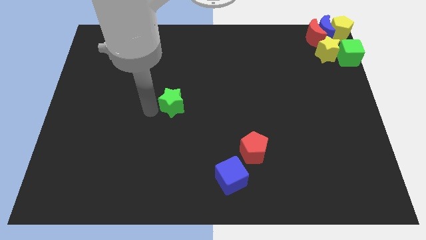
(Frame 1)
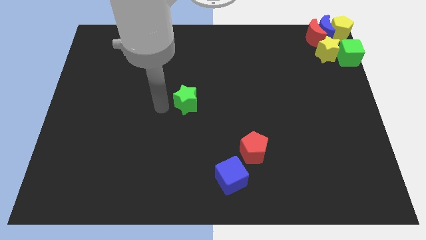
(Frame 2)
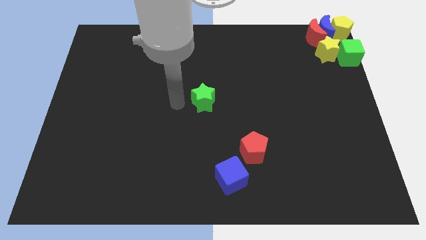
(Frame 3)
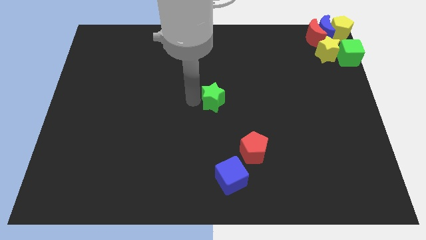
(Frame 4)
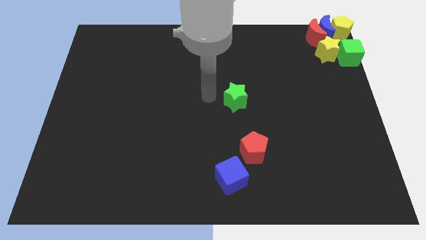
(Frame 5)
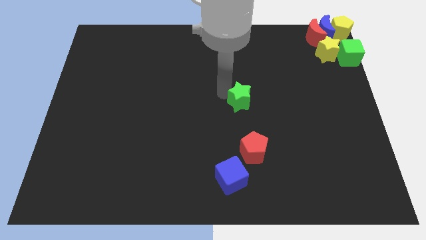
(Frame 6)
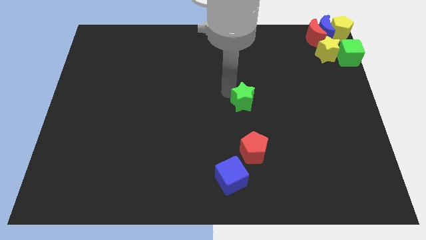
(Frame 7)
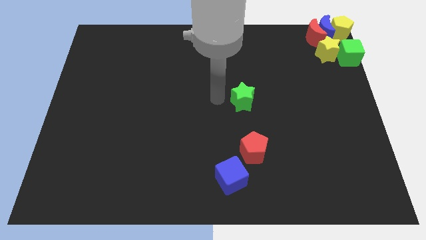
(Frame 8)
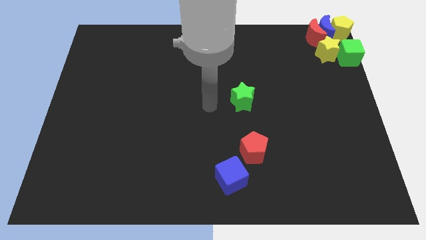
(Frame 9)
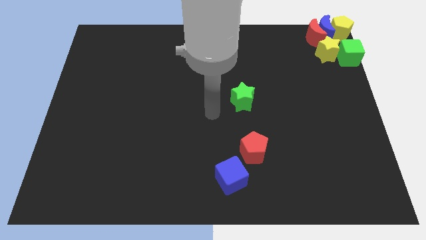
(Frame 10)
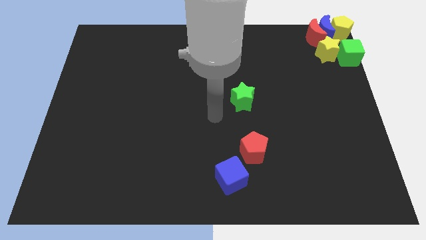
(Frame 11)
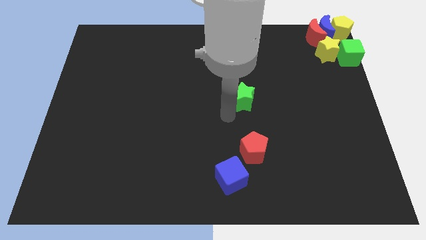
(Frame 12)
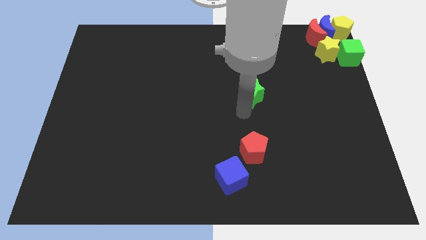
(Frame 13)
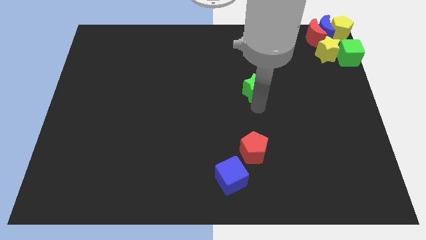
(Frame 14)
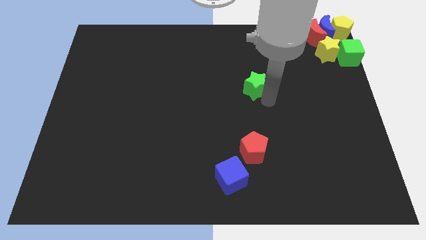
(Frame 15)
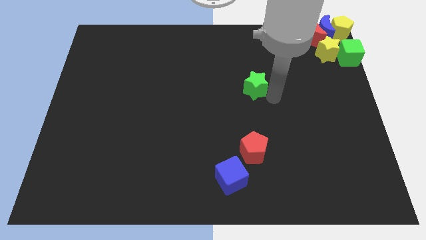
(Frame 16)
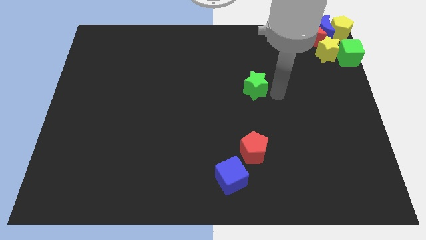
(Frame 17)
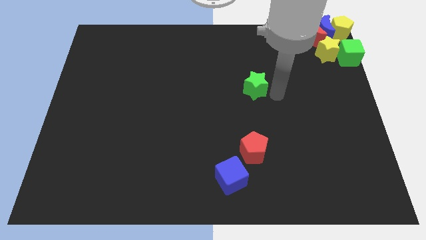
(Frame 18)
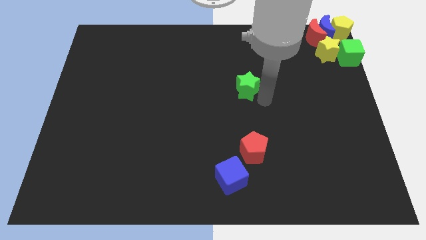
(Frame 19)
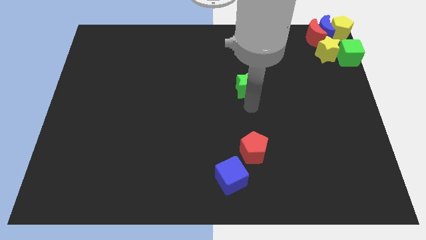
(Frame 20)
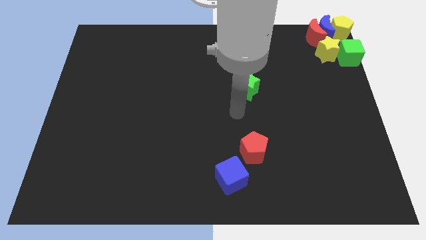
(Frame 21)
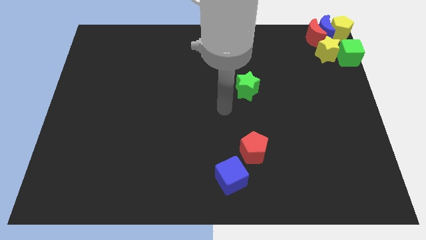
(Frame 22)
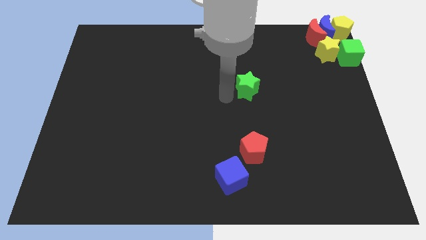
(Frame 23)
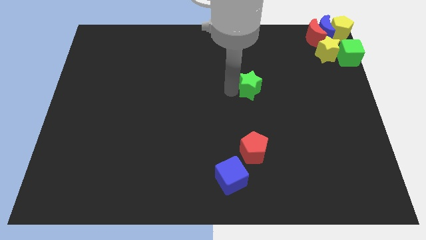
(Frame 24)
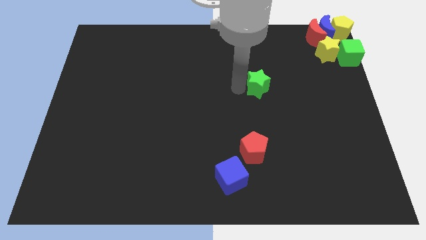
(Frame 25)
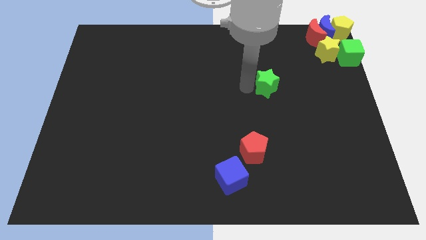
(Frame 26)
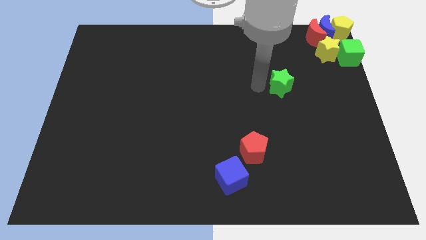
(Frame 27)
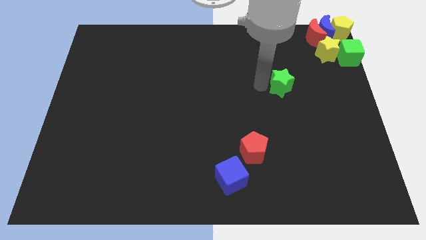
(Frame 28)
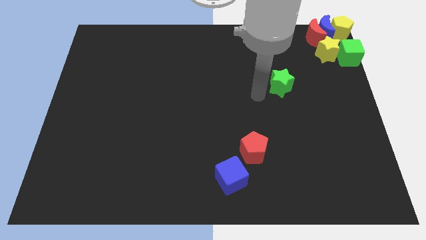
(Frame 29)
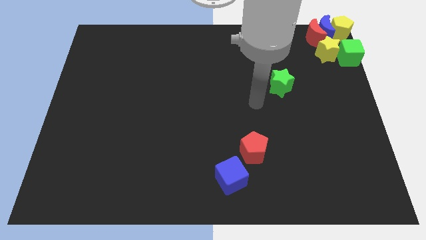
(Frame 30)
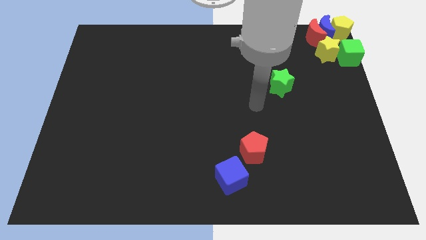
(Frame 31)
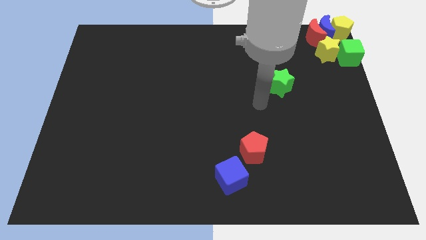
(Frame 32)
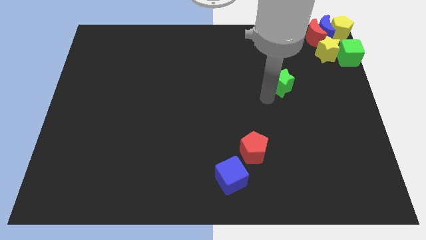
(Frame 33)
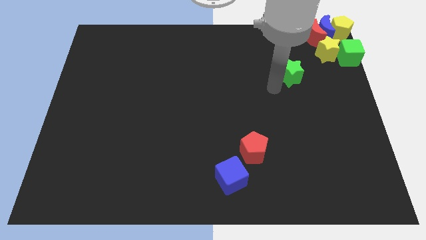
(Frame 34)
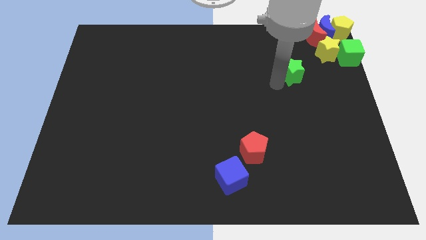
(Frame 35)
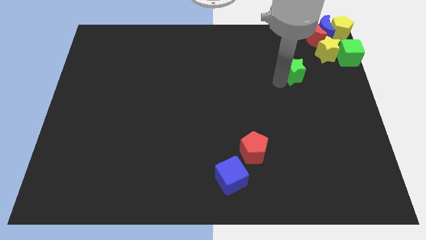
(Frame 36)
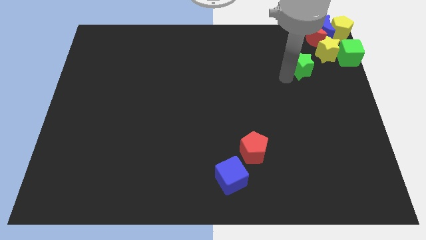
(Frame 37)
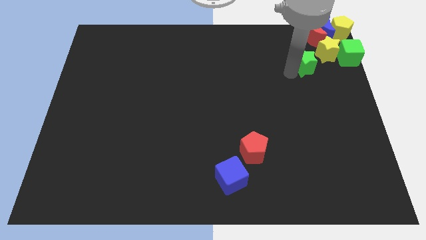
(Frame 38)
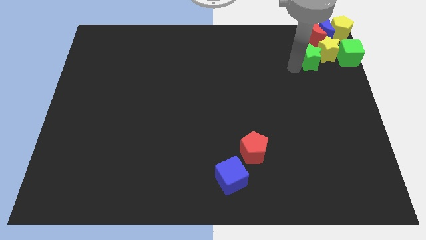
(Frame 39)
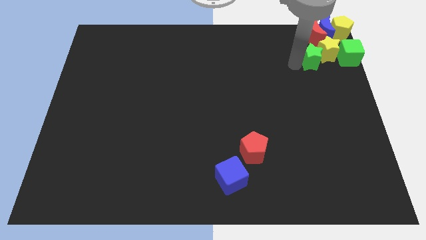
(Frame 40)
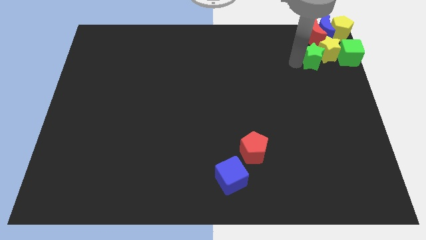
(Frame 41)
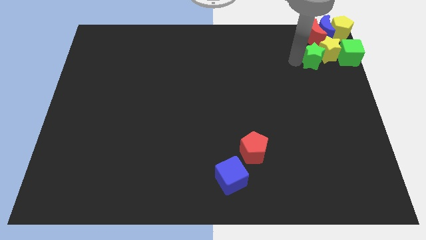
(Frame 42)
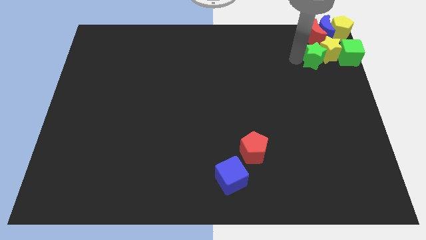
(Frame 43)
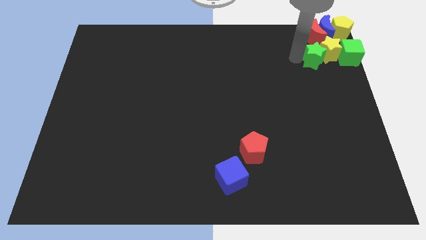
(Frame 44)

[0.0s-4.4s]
move the green star to the left of the yellow star

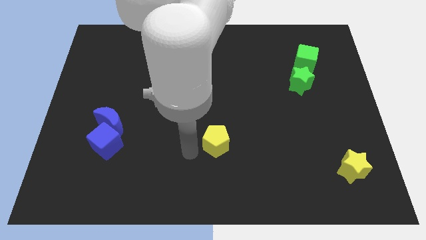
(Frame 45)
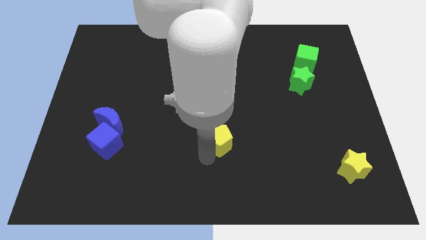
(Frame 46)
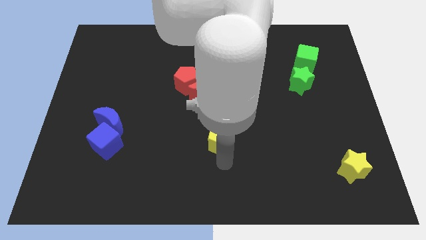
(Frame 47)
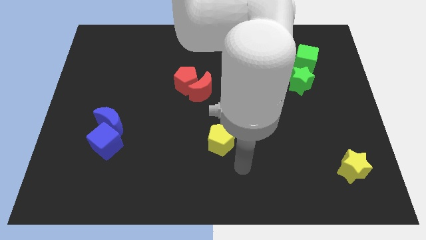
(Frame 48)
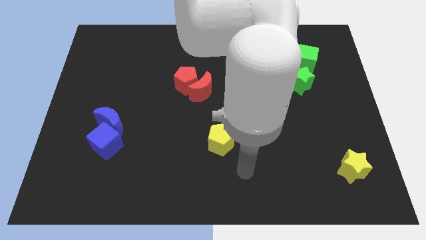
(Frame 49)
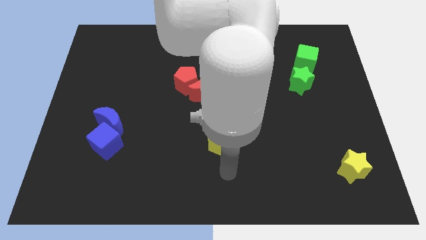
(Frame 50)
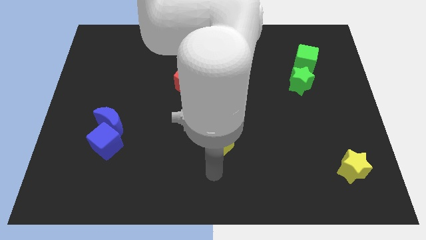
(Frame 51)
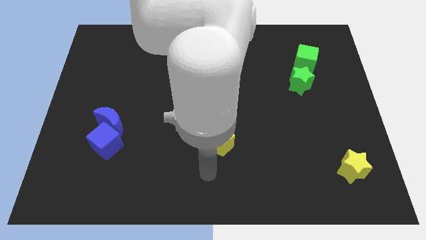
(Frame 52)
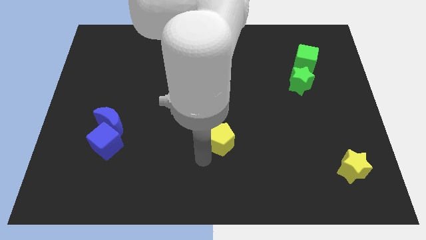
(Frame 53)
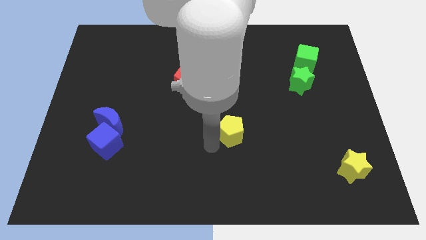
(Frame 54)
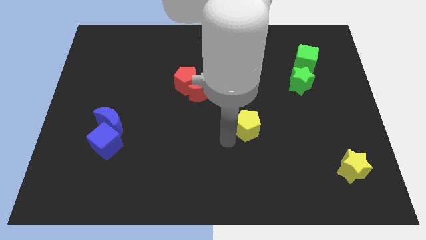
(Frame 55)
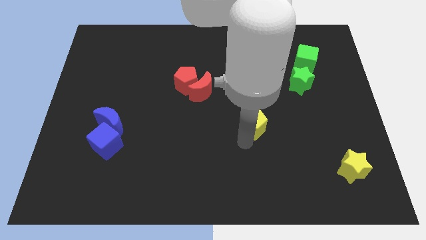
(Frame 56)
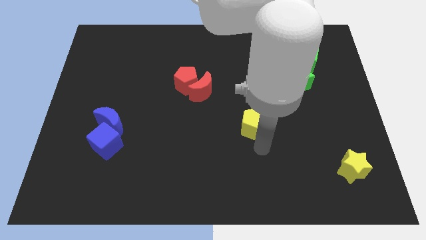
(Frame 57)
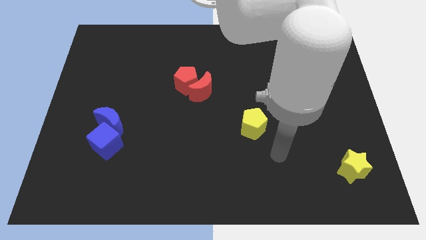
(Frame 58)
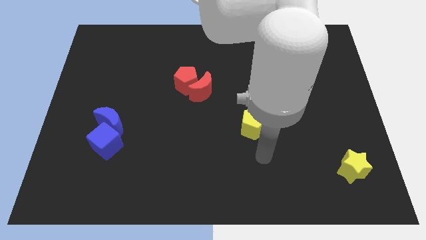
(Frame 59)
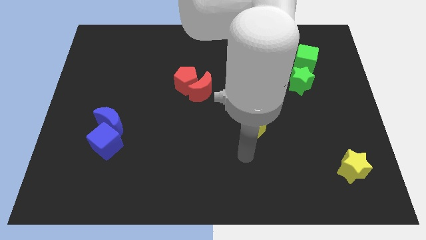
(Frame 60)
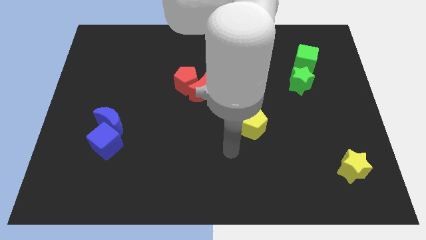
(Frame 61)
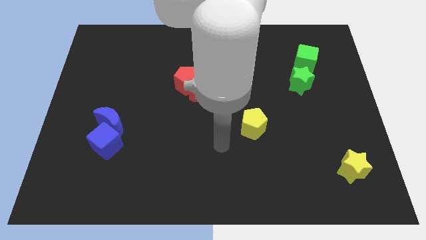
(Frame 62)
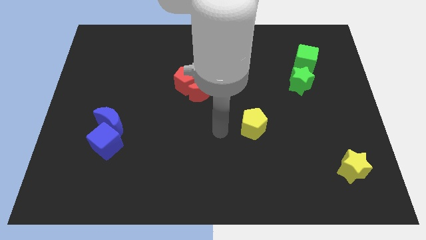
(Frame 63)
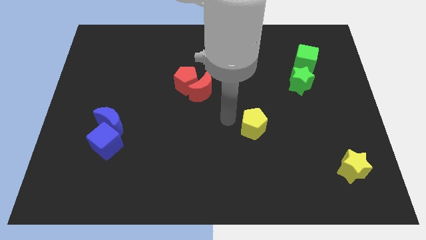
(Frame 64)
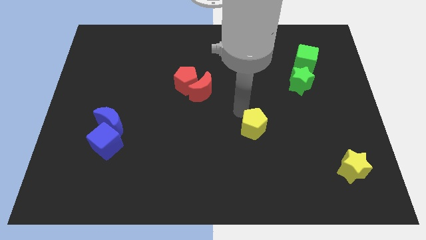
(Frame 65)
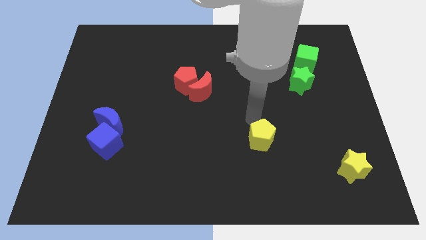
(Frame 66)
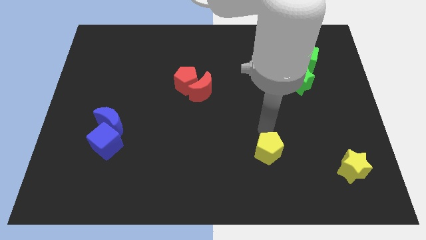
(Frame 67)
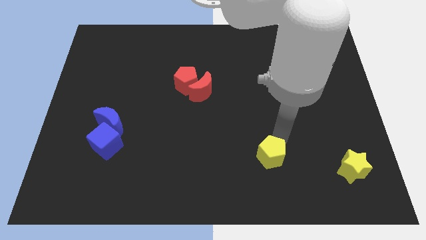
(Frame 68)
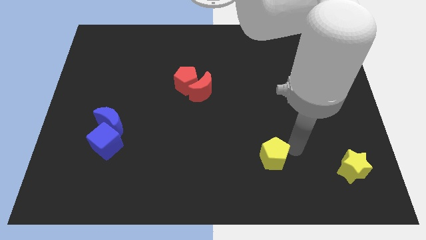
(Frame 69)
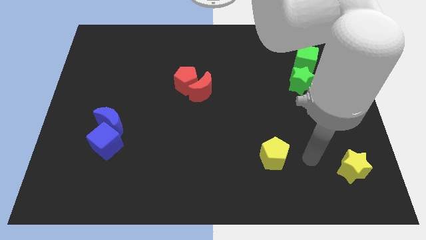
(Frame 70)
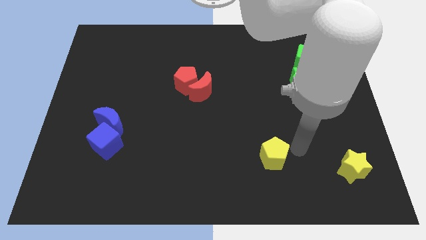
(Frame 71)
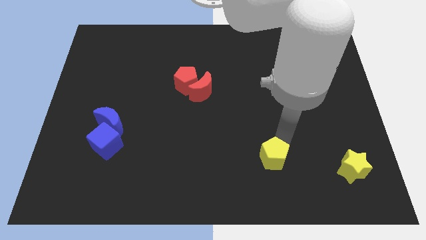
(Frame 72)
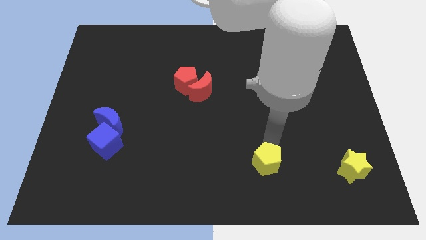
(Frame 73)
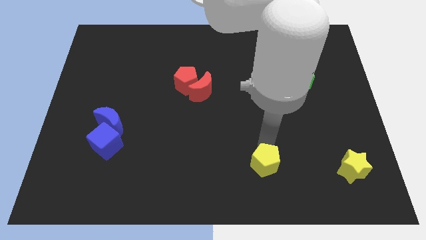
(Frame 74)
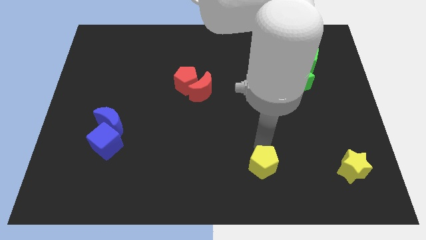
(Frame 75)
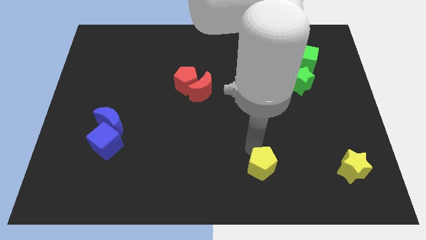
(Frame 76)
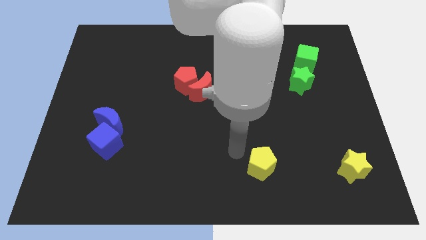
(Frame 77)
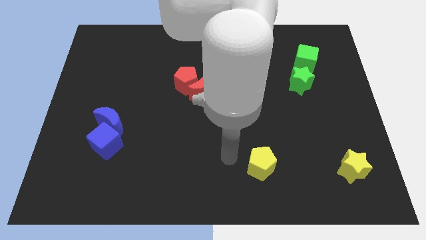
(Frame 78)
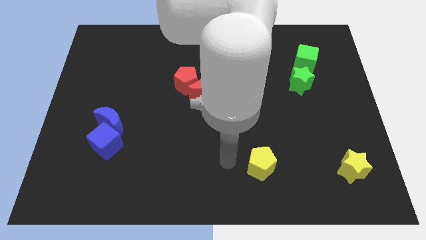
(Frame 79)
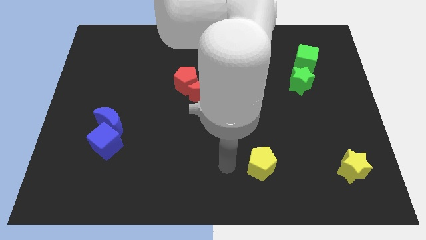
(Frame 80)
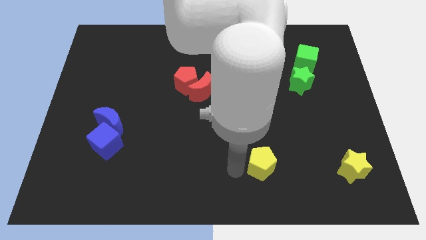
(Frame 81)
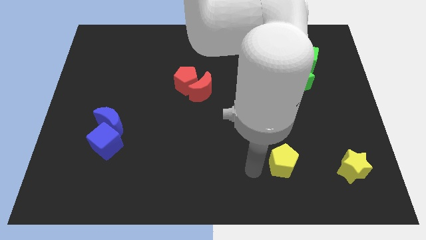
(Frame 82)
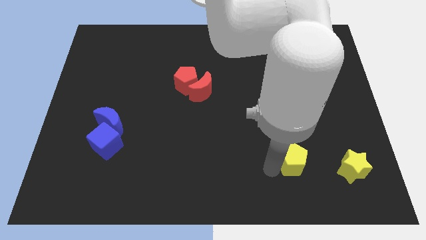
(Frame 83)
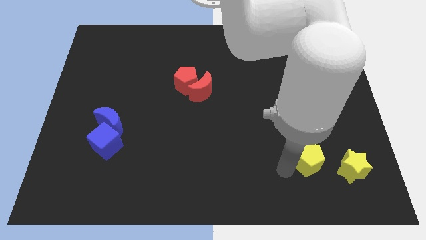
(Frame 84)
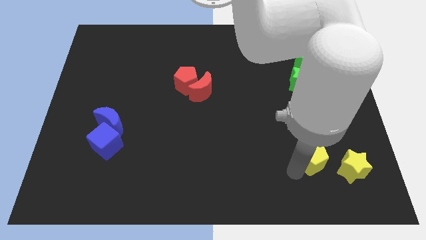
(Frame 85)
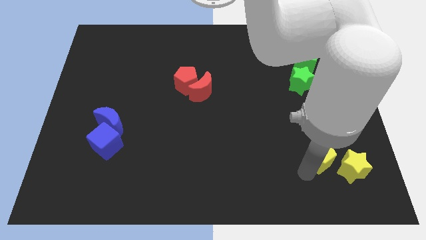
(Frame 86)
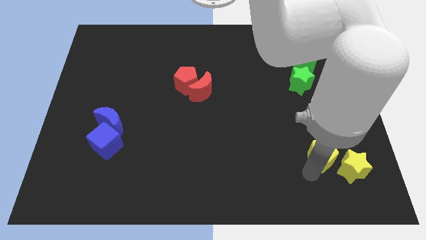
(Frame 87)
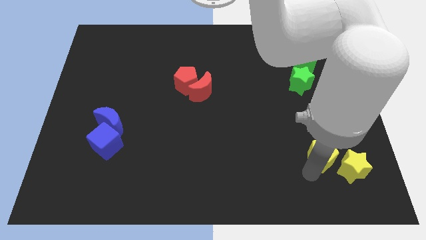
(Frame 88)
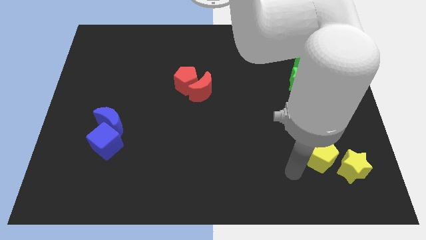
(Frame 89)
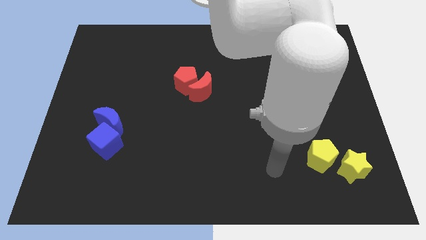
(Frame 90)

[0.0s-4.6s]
push yellow pentagon close to yellow star

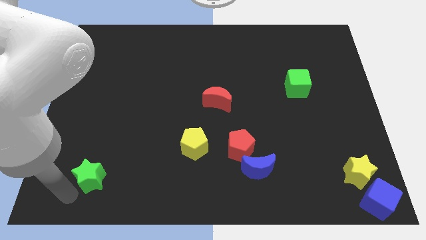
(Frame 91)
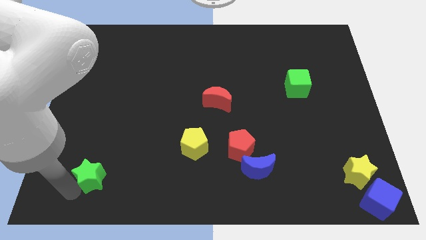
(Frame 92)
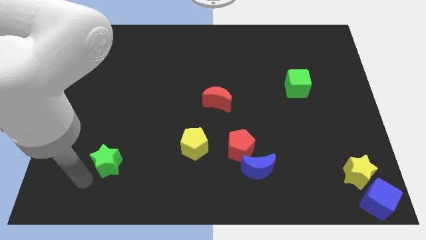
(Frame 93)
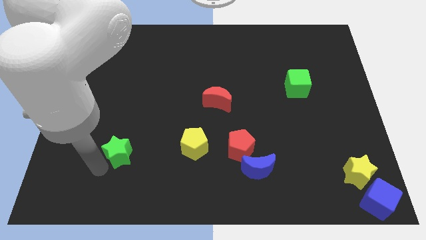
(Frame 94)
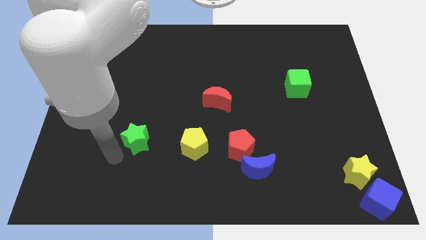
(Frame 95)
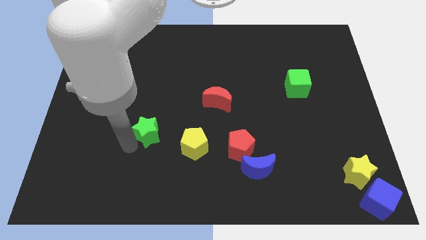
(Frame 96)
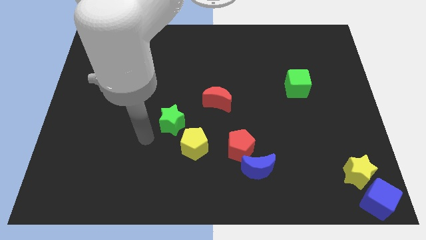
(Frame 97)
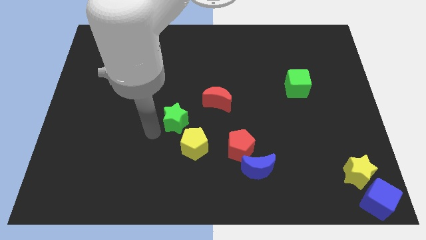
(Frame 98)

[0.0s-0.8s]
push the green star to the top left of the yellow pentagon
